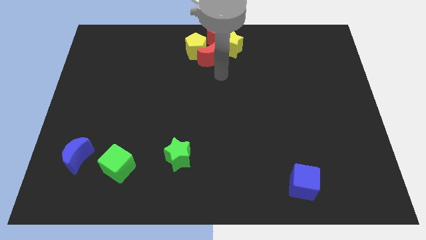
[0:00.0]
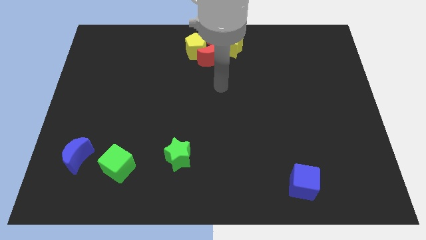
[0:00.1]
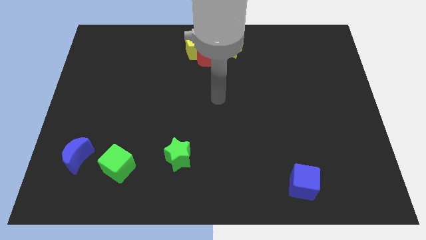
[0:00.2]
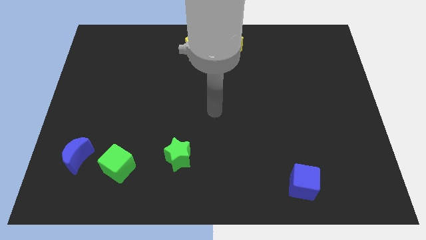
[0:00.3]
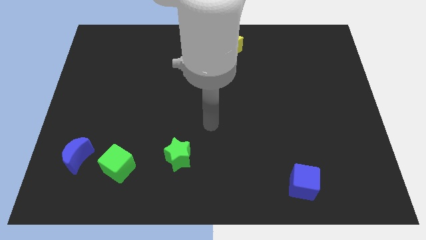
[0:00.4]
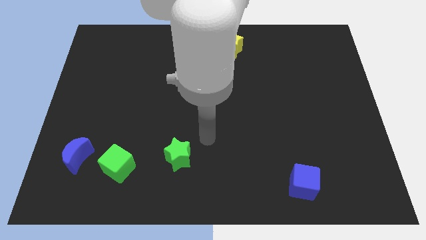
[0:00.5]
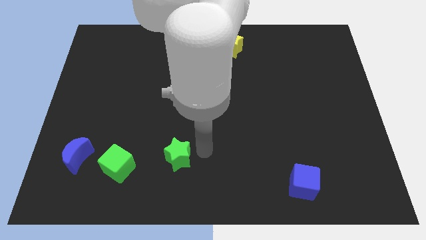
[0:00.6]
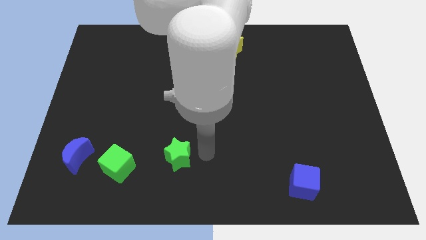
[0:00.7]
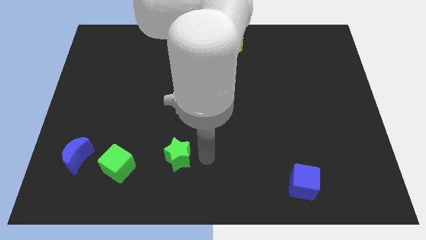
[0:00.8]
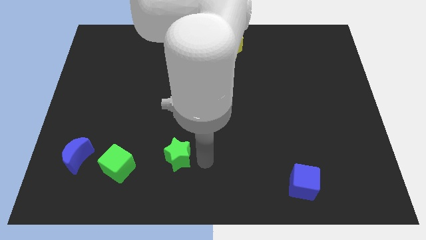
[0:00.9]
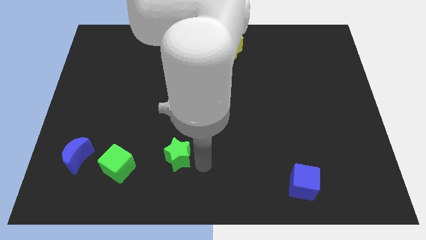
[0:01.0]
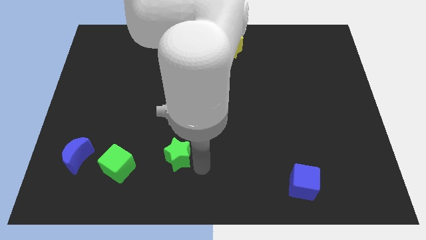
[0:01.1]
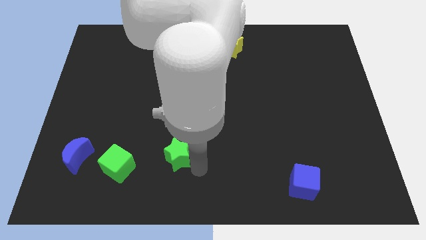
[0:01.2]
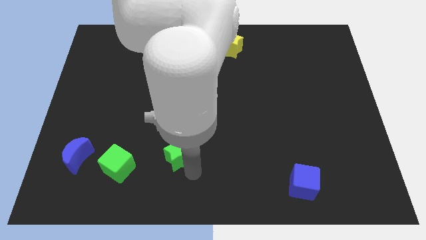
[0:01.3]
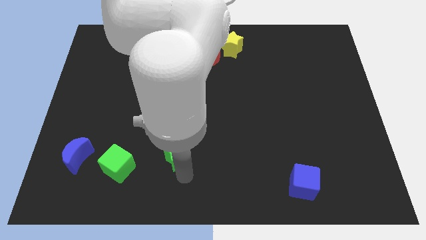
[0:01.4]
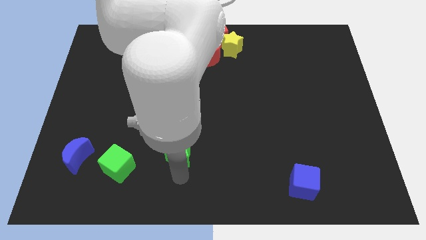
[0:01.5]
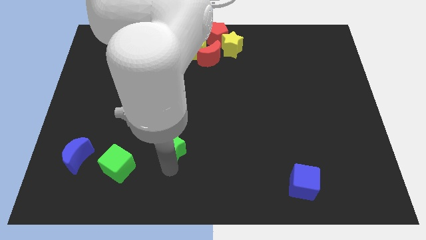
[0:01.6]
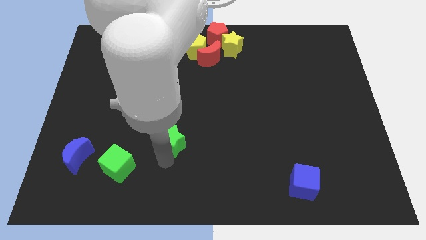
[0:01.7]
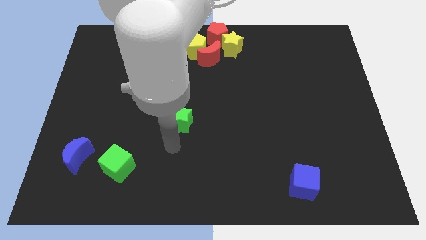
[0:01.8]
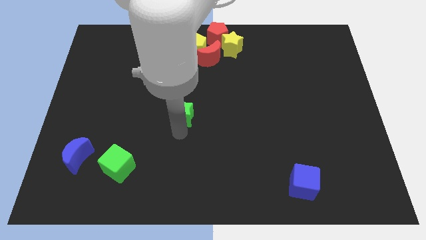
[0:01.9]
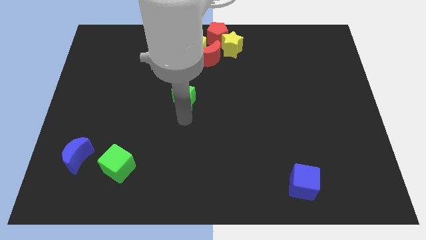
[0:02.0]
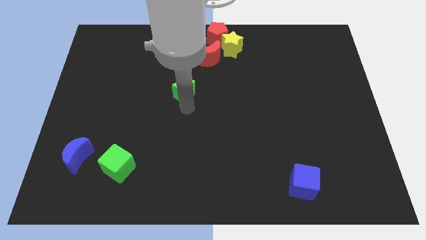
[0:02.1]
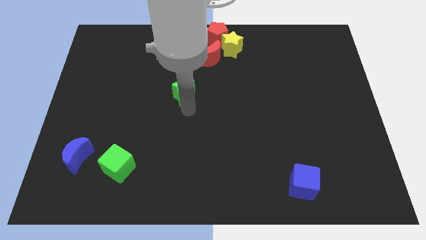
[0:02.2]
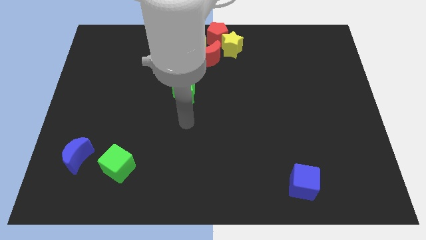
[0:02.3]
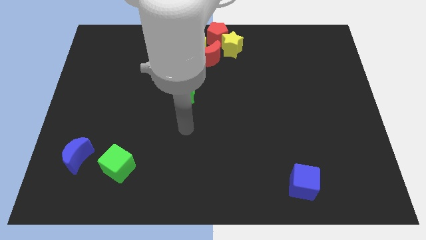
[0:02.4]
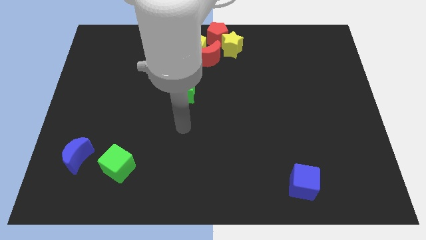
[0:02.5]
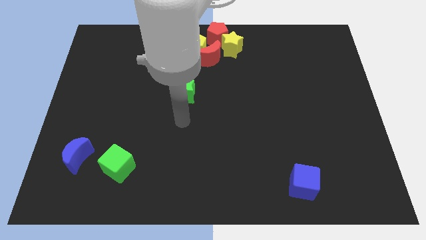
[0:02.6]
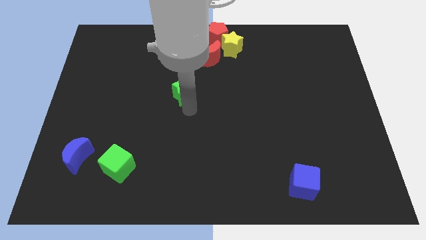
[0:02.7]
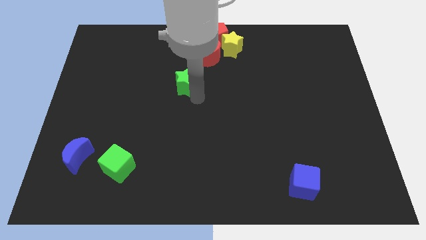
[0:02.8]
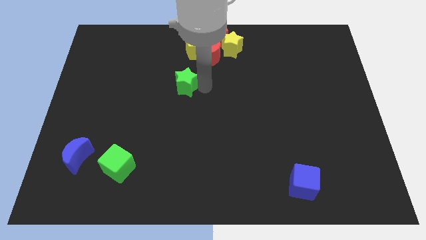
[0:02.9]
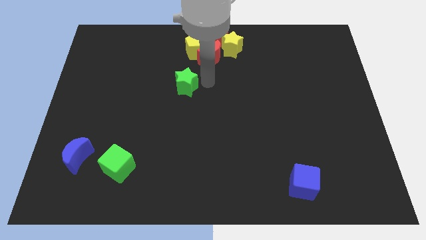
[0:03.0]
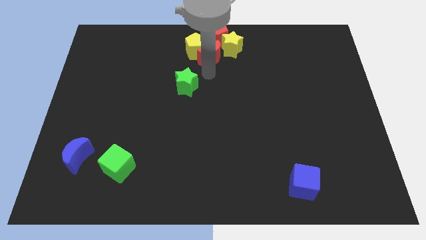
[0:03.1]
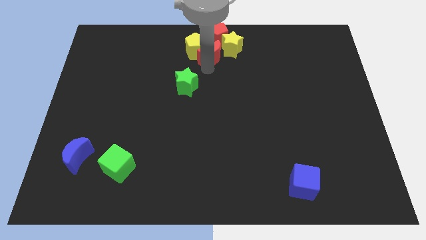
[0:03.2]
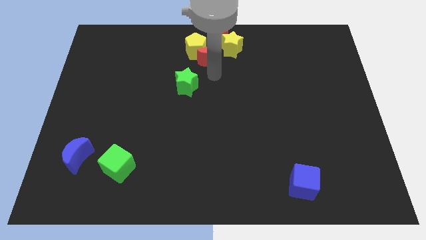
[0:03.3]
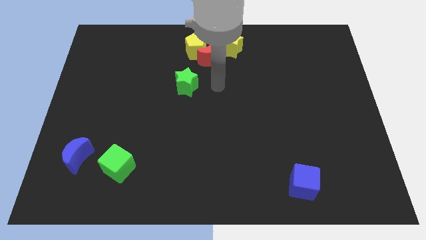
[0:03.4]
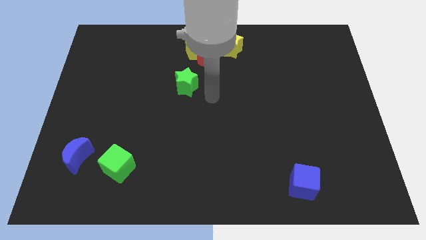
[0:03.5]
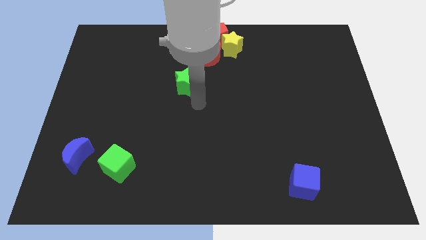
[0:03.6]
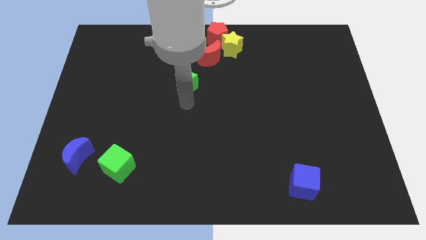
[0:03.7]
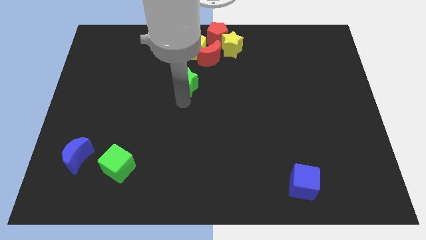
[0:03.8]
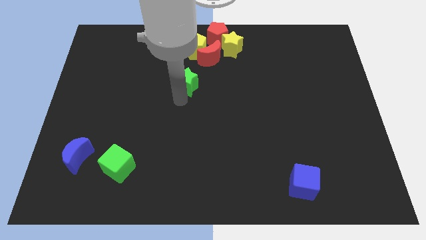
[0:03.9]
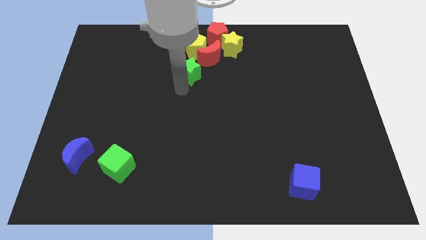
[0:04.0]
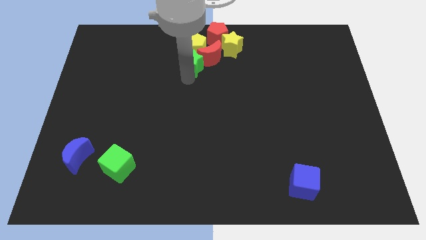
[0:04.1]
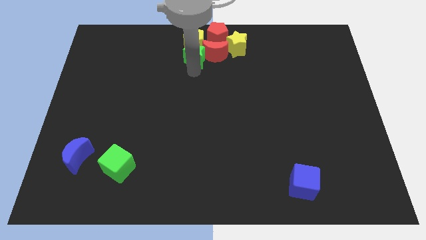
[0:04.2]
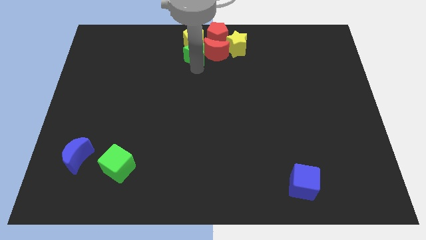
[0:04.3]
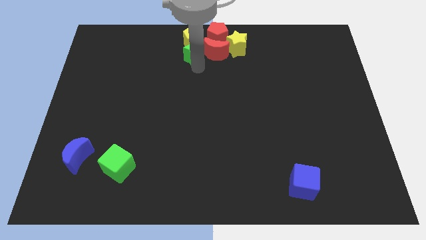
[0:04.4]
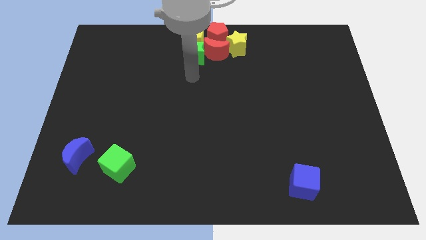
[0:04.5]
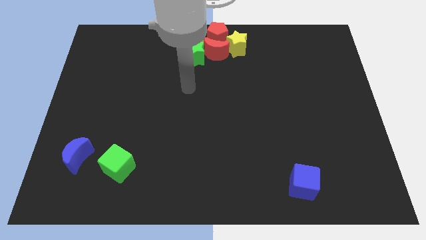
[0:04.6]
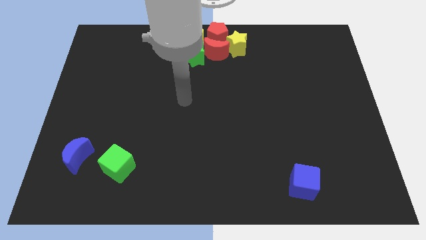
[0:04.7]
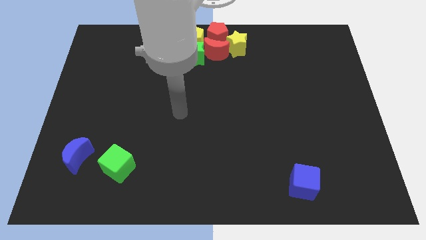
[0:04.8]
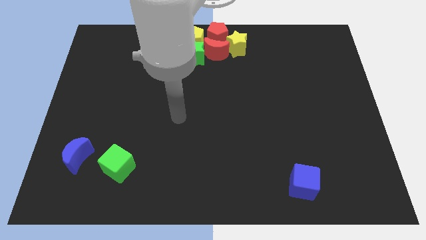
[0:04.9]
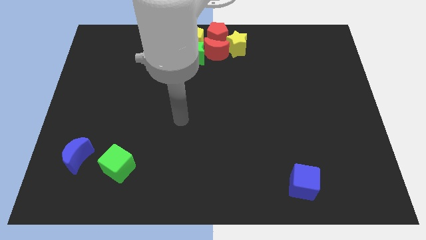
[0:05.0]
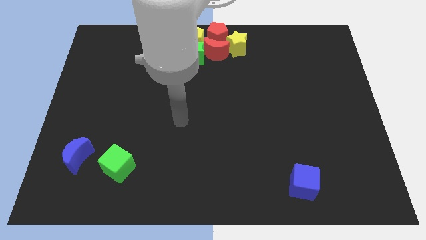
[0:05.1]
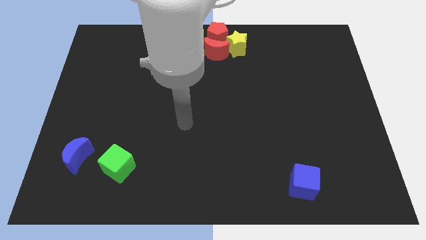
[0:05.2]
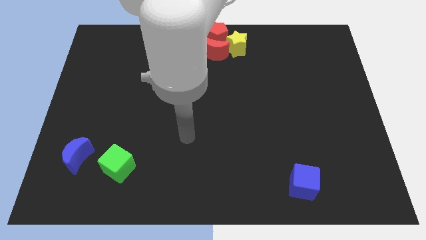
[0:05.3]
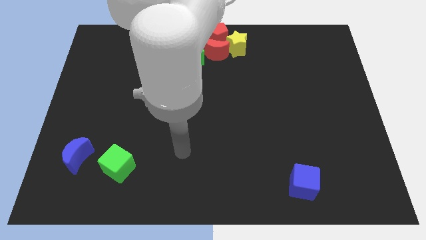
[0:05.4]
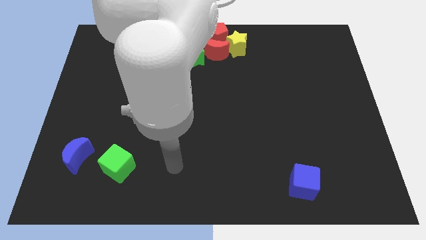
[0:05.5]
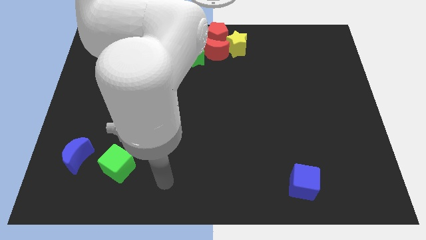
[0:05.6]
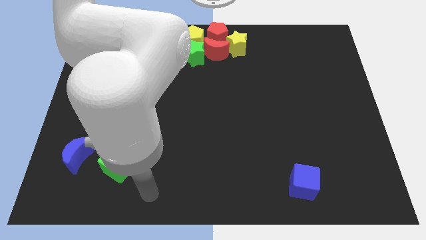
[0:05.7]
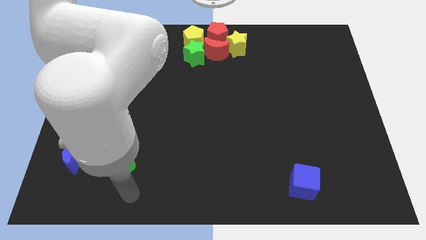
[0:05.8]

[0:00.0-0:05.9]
move green star to bottom right side of yellow pentagon

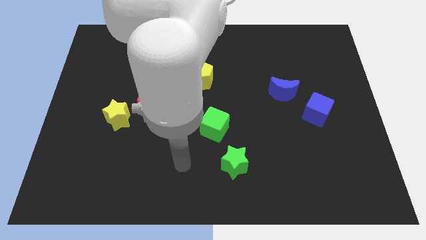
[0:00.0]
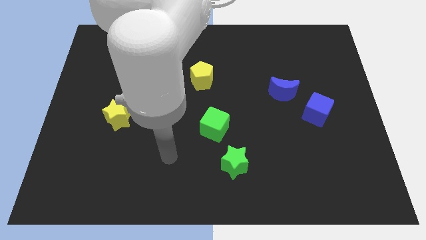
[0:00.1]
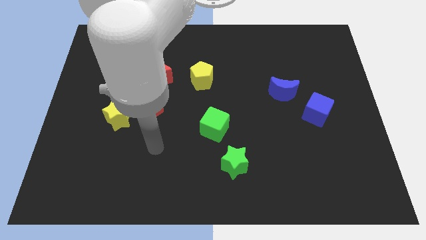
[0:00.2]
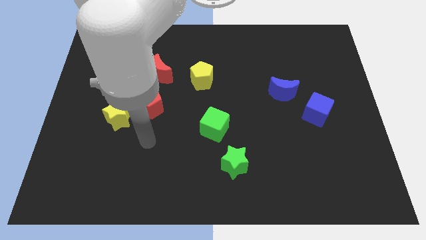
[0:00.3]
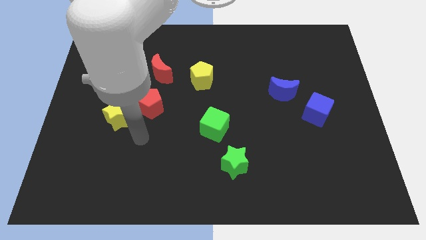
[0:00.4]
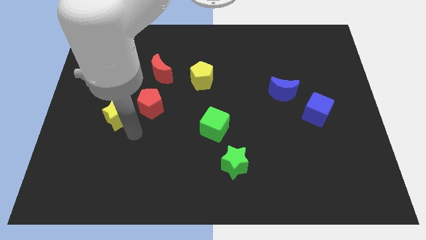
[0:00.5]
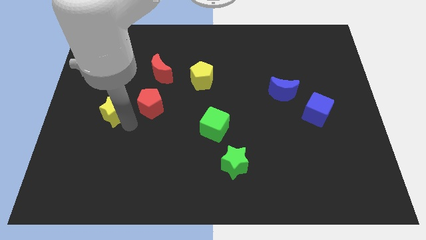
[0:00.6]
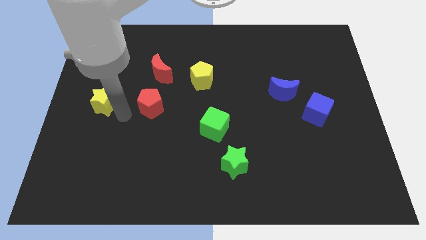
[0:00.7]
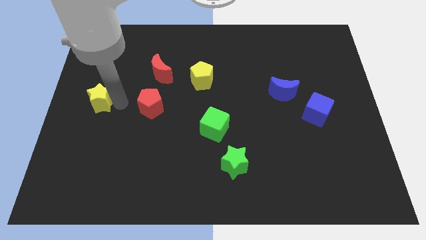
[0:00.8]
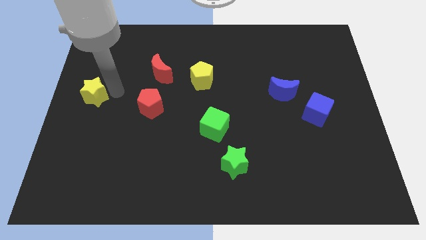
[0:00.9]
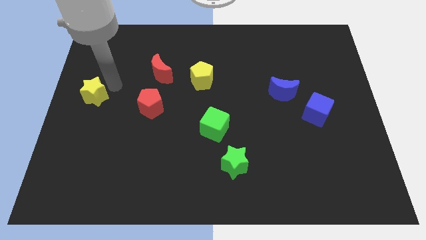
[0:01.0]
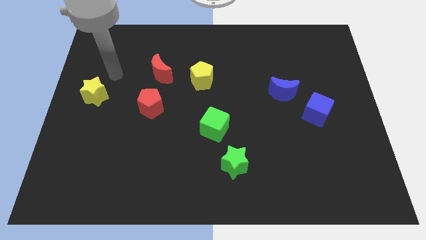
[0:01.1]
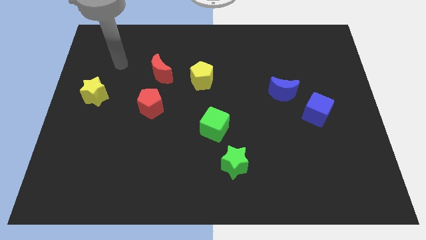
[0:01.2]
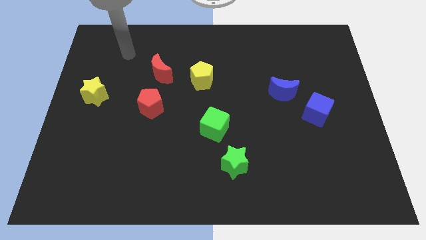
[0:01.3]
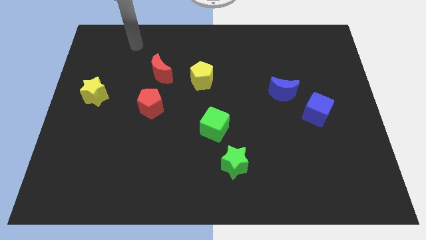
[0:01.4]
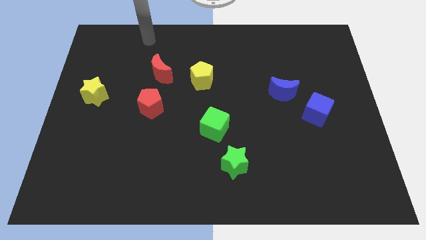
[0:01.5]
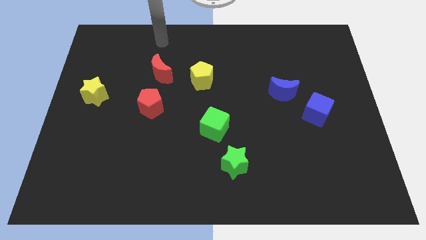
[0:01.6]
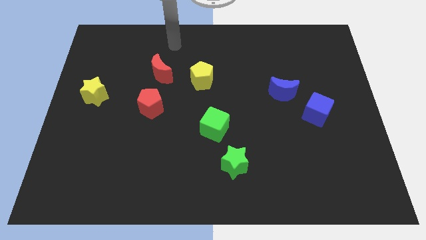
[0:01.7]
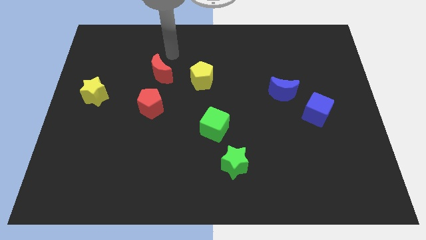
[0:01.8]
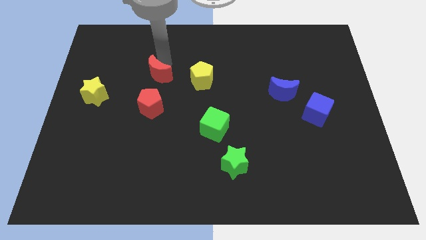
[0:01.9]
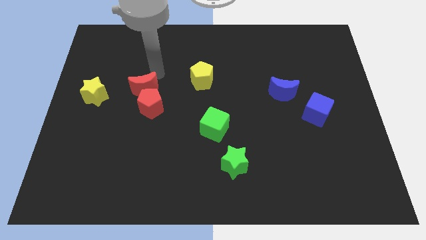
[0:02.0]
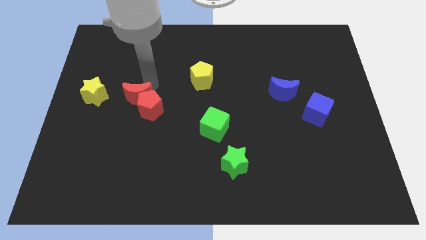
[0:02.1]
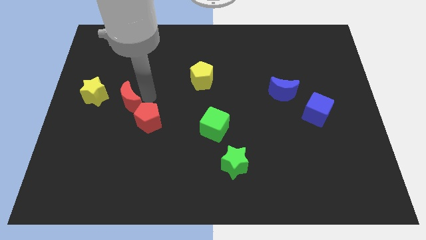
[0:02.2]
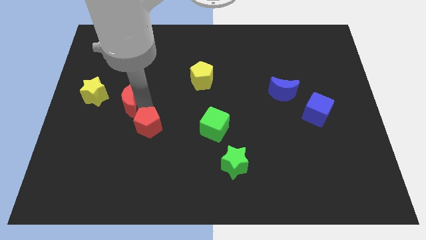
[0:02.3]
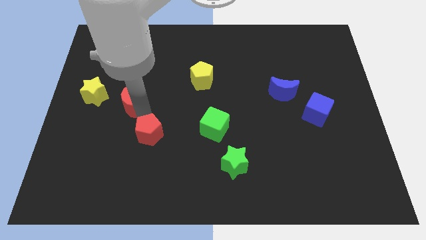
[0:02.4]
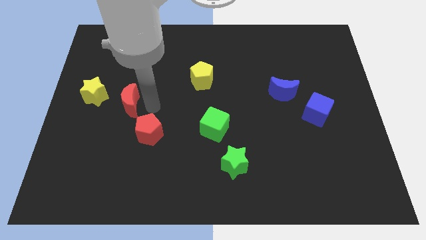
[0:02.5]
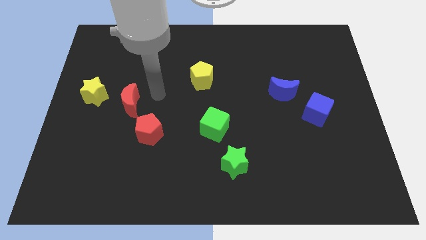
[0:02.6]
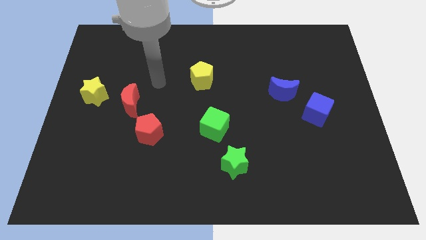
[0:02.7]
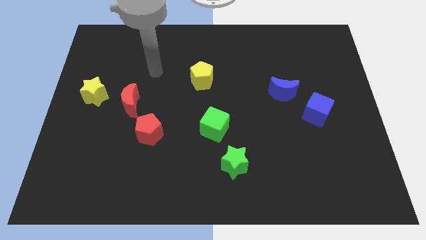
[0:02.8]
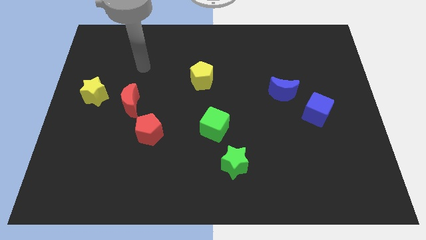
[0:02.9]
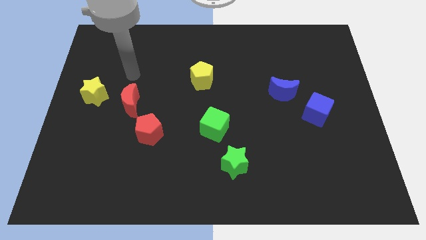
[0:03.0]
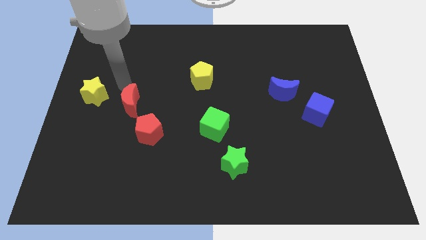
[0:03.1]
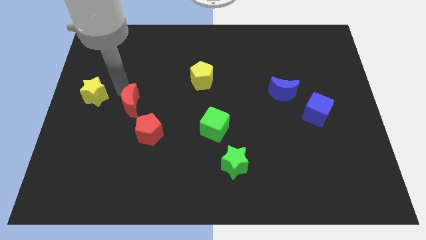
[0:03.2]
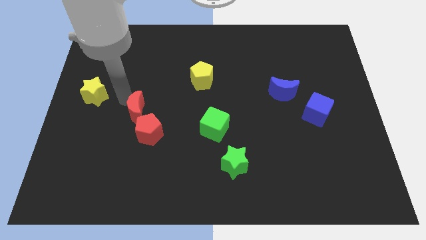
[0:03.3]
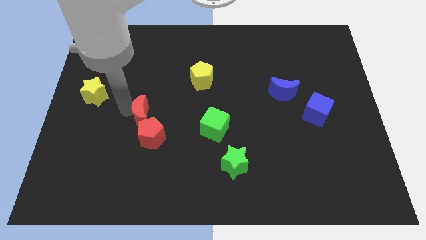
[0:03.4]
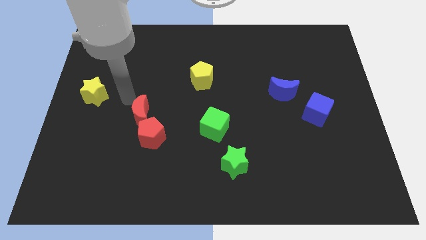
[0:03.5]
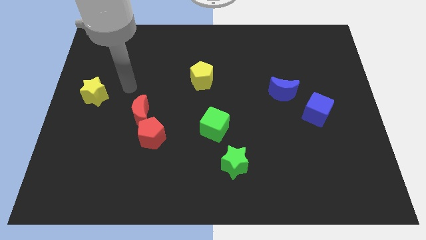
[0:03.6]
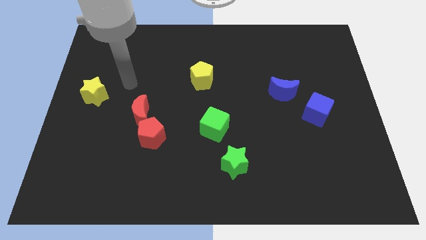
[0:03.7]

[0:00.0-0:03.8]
push the red blocks together at the left side of the green cube
